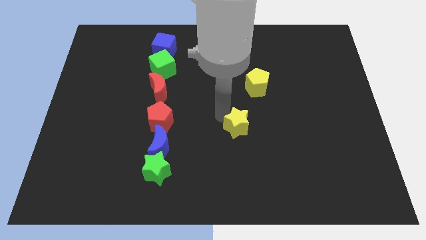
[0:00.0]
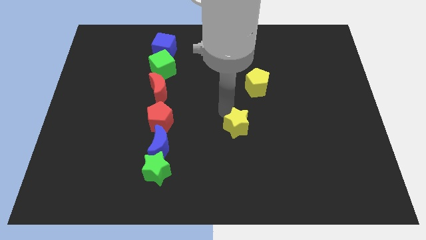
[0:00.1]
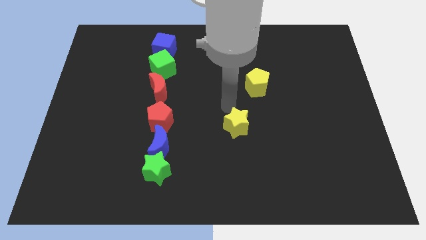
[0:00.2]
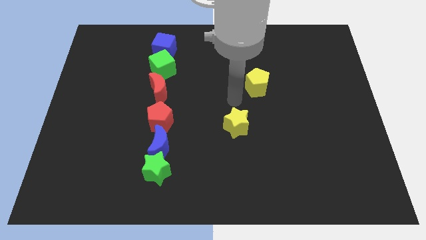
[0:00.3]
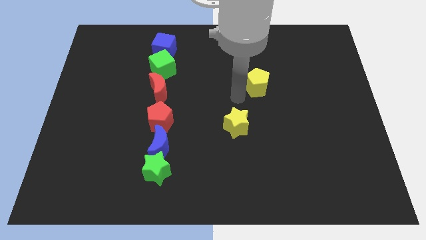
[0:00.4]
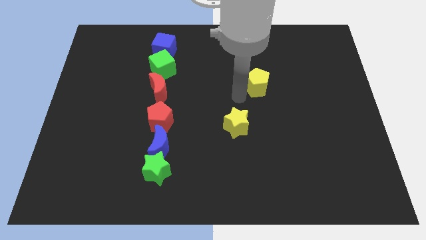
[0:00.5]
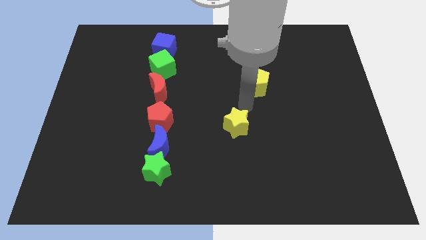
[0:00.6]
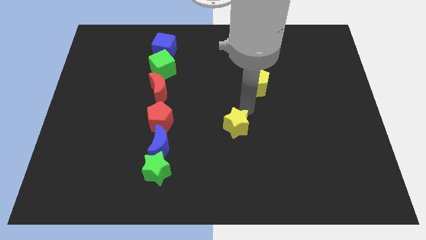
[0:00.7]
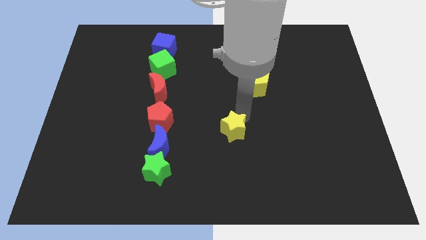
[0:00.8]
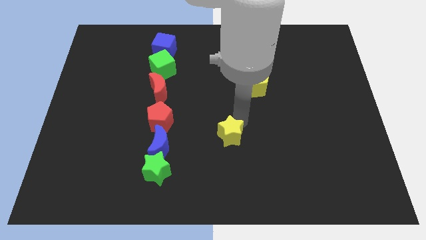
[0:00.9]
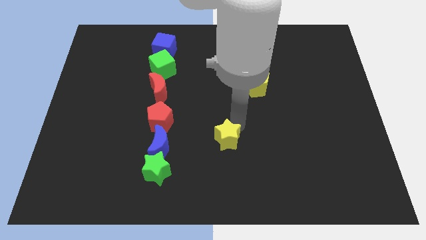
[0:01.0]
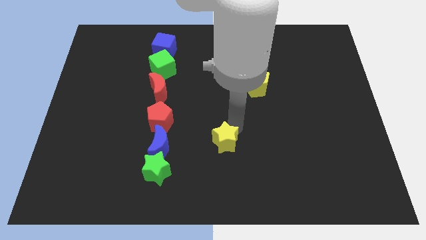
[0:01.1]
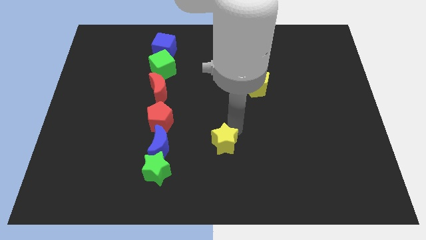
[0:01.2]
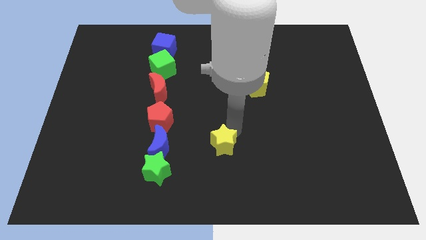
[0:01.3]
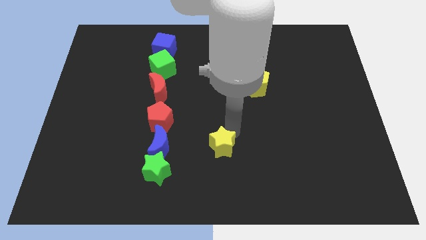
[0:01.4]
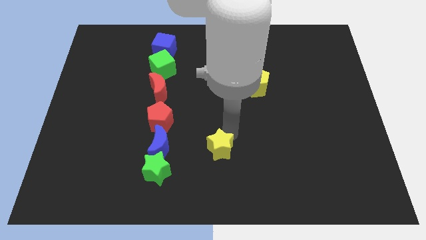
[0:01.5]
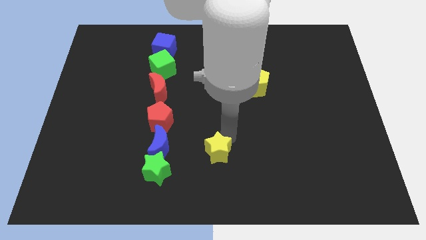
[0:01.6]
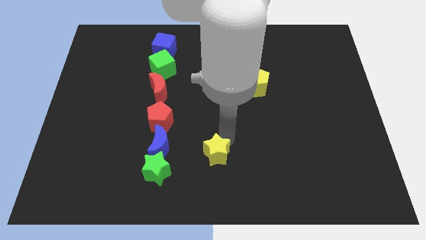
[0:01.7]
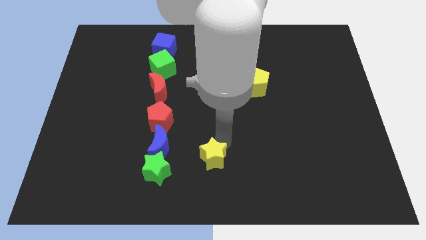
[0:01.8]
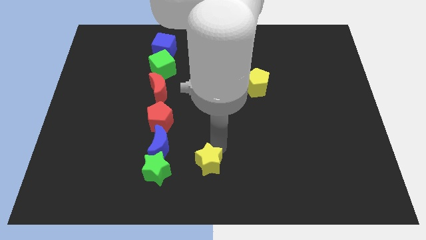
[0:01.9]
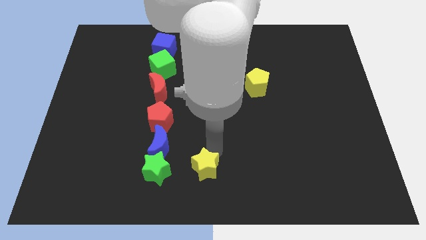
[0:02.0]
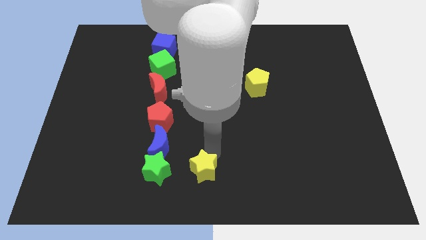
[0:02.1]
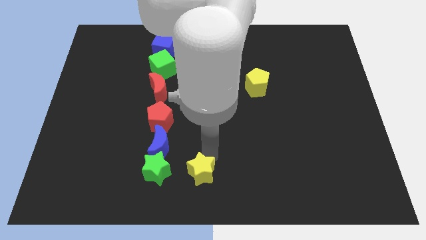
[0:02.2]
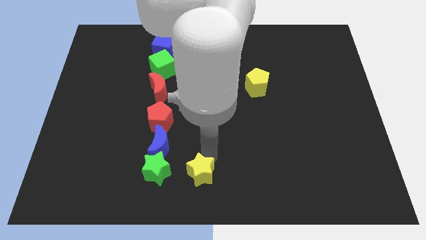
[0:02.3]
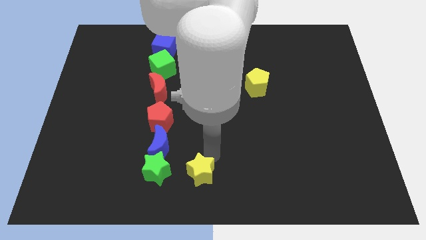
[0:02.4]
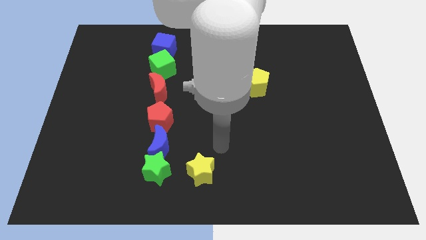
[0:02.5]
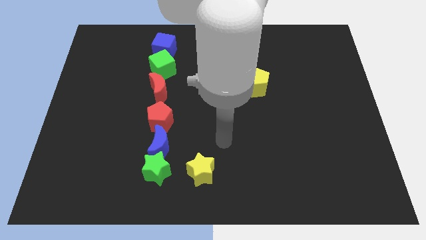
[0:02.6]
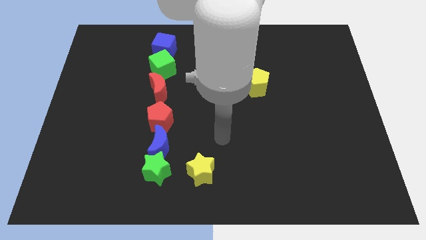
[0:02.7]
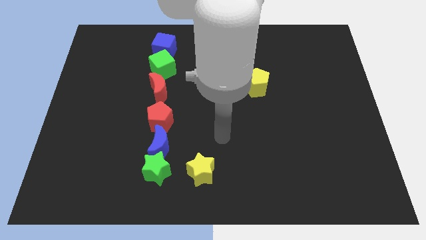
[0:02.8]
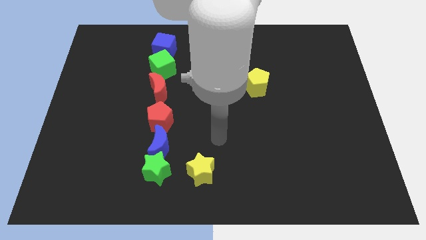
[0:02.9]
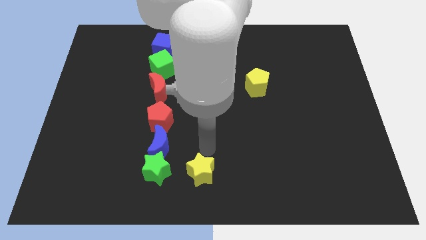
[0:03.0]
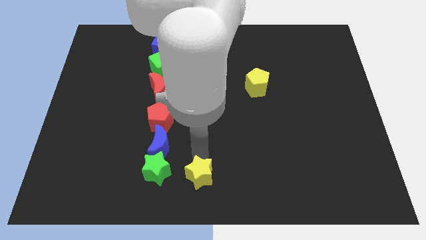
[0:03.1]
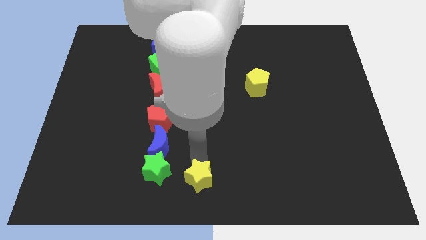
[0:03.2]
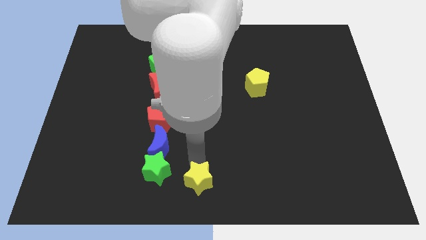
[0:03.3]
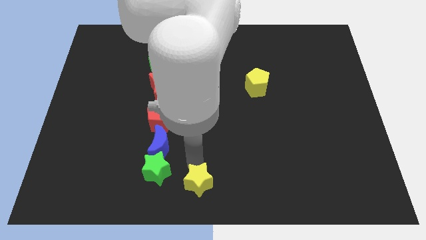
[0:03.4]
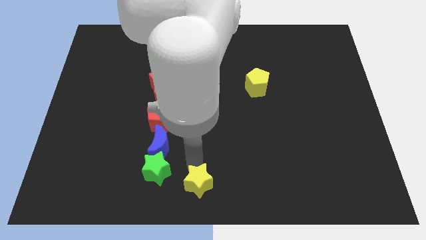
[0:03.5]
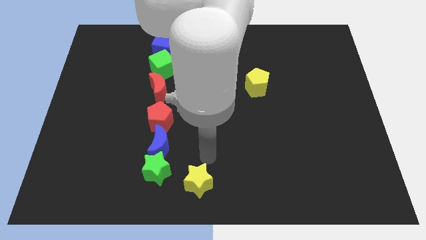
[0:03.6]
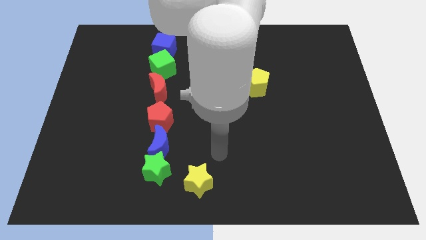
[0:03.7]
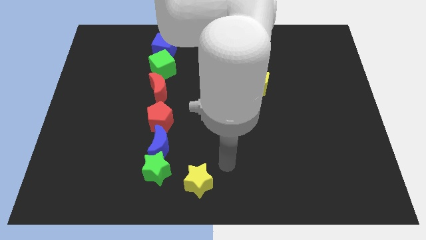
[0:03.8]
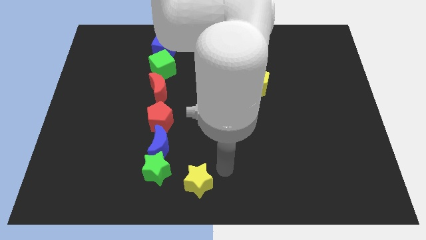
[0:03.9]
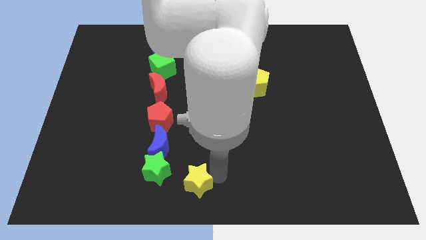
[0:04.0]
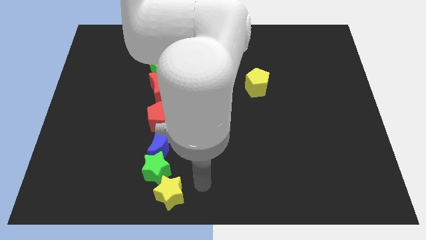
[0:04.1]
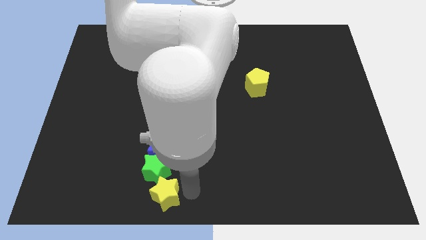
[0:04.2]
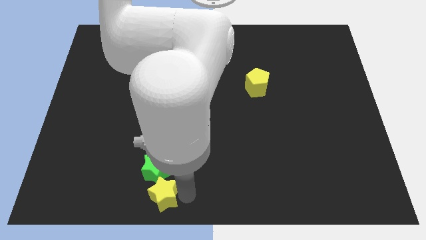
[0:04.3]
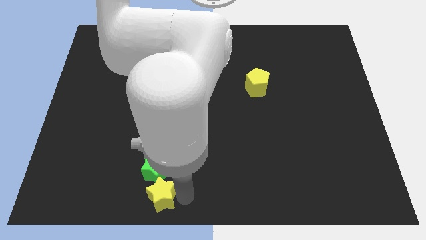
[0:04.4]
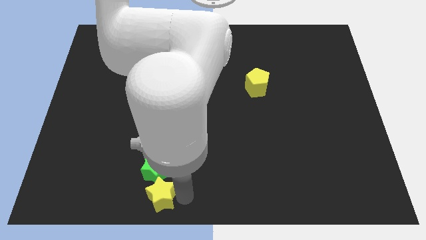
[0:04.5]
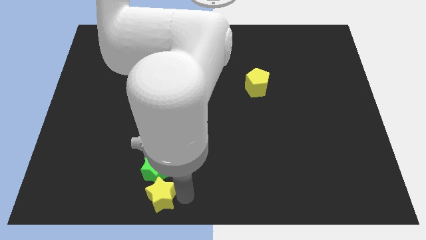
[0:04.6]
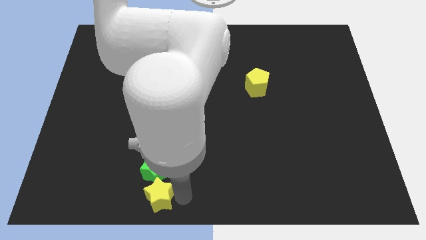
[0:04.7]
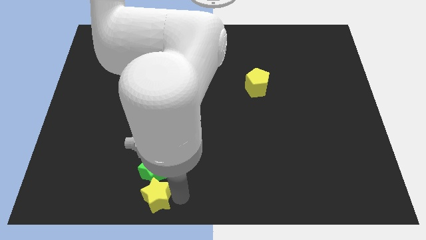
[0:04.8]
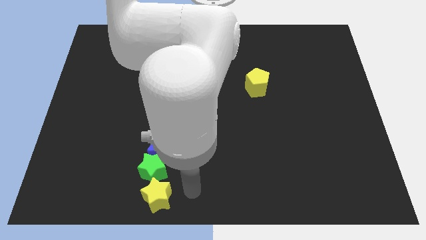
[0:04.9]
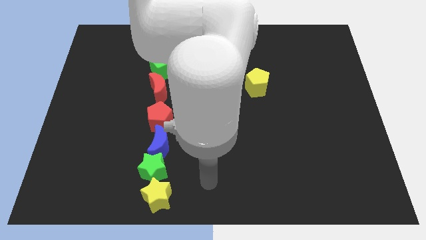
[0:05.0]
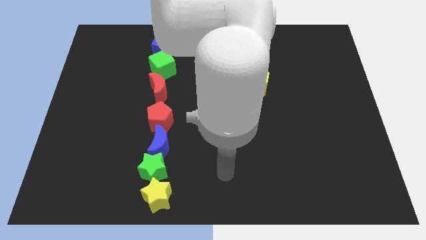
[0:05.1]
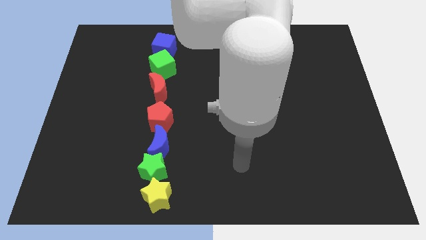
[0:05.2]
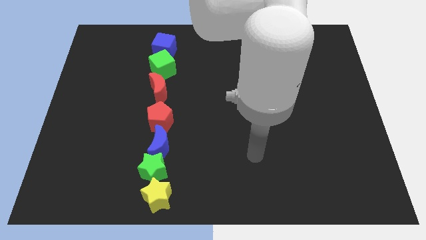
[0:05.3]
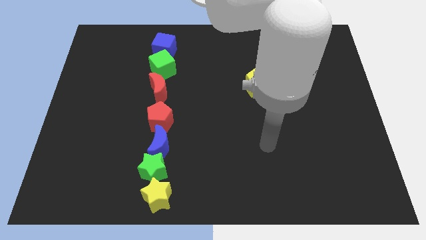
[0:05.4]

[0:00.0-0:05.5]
put the yellow star below the green star

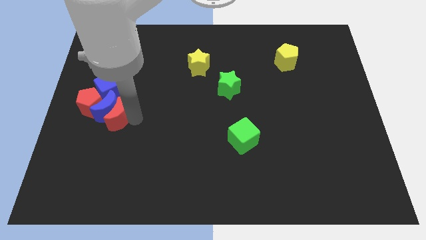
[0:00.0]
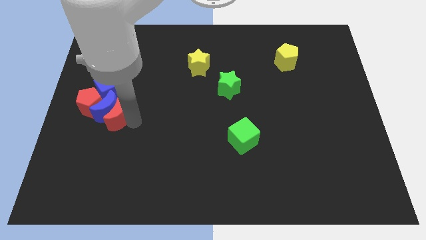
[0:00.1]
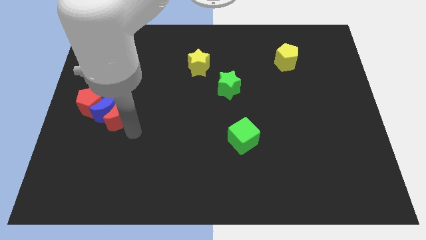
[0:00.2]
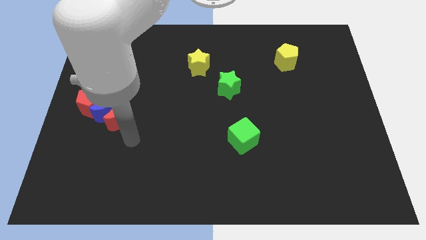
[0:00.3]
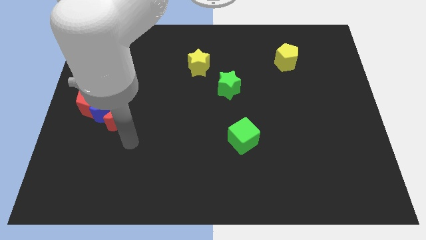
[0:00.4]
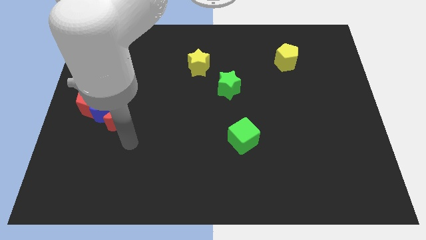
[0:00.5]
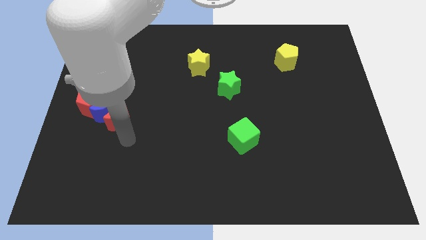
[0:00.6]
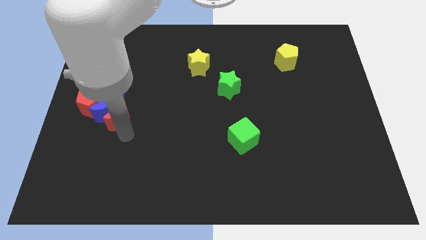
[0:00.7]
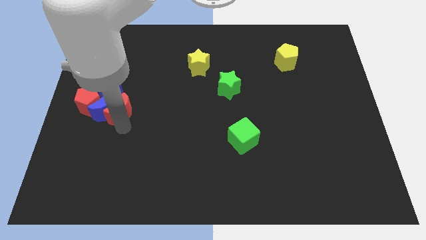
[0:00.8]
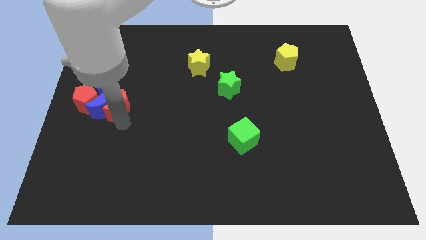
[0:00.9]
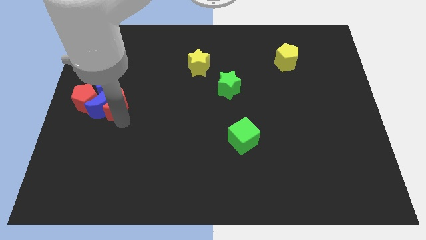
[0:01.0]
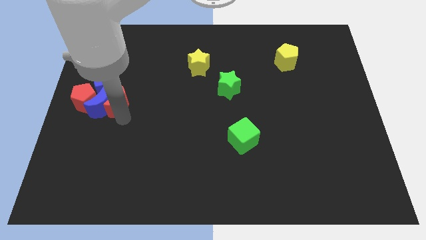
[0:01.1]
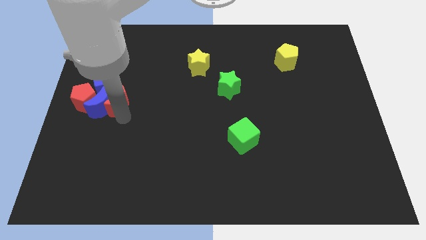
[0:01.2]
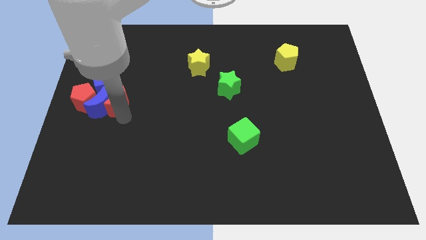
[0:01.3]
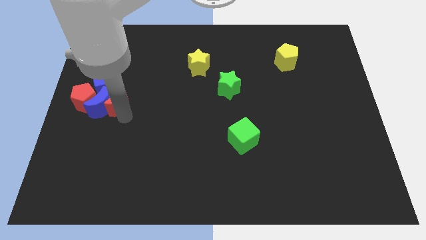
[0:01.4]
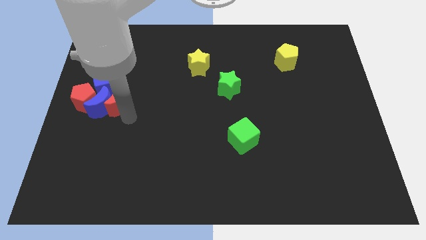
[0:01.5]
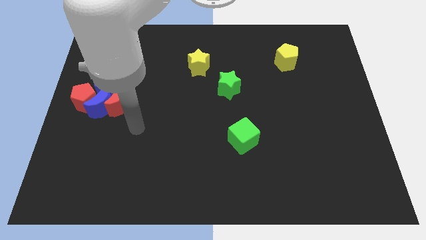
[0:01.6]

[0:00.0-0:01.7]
move the group of red and blue blocks towards the left center of the board

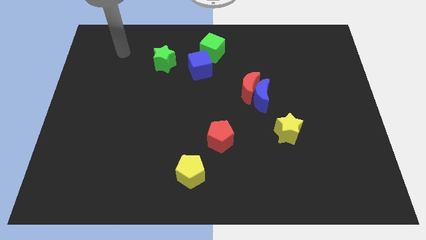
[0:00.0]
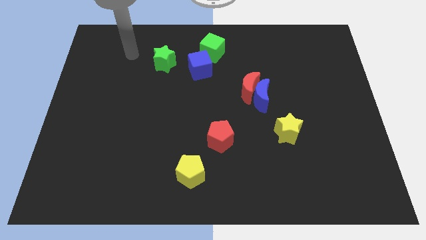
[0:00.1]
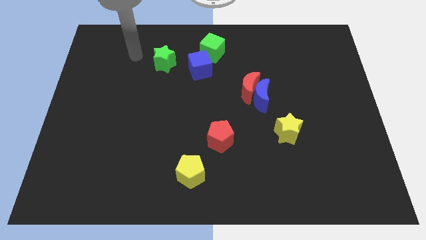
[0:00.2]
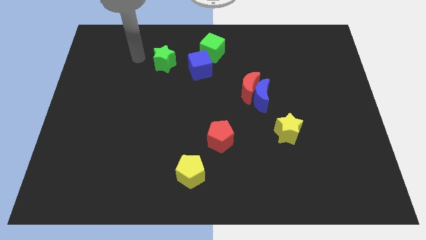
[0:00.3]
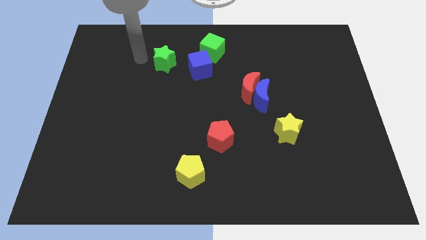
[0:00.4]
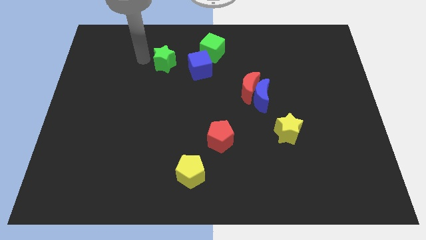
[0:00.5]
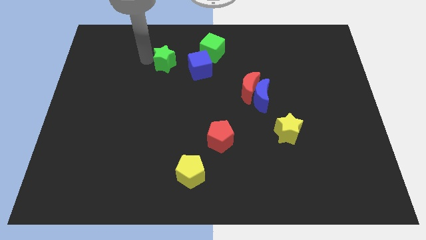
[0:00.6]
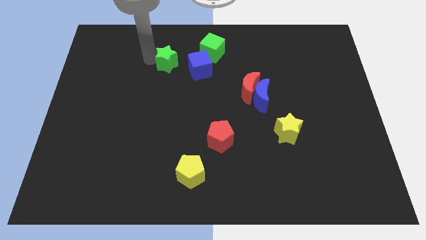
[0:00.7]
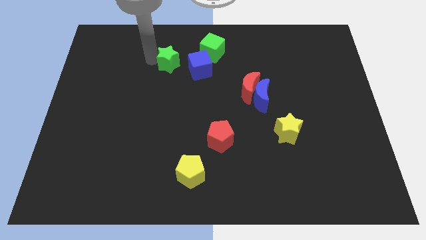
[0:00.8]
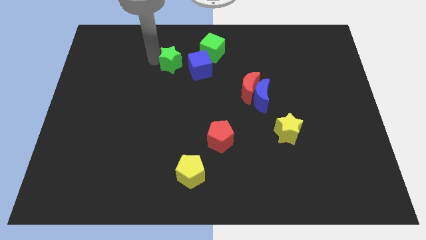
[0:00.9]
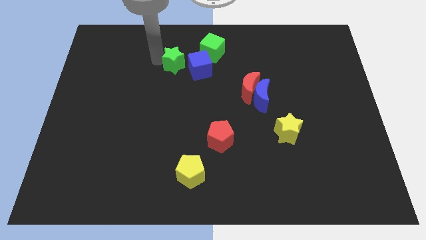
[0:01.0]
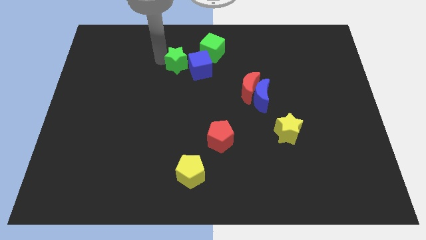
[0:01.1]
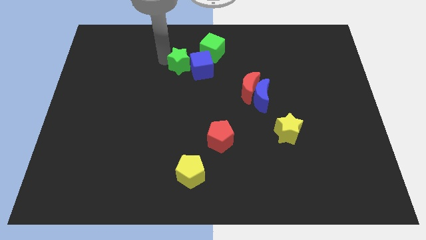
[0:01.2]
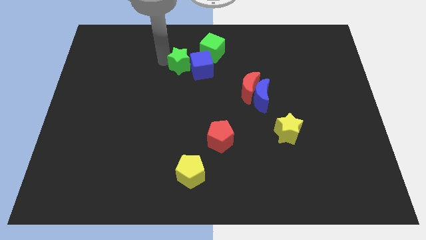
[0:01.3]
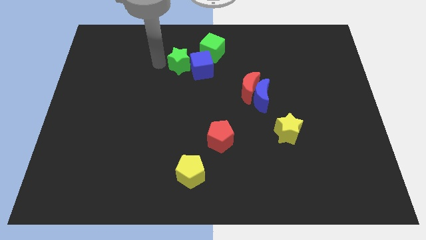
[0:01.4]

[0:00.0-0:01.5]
push green star to the left of blue cube

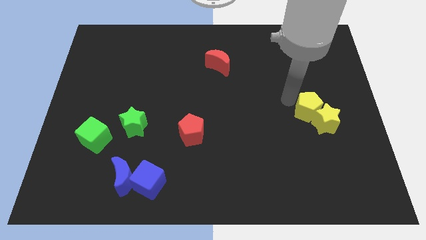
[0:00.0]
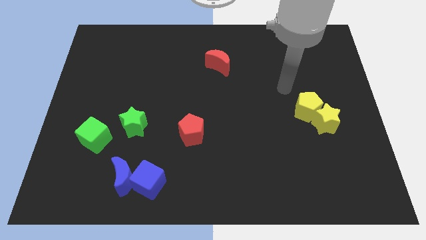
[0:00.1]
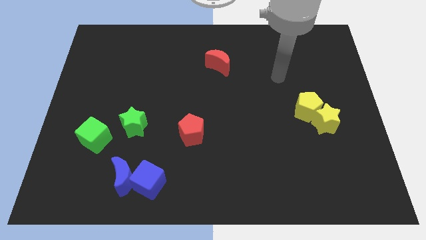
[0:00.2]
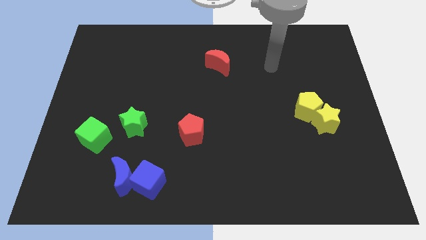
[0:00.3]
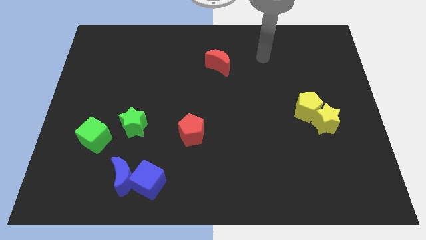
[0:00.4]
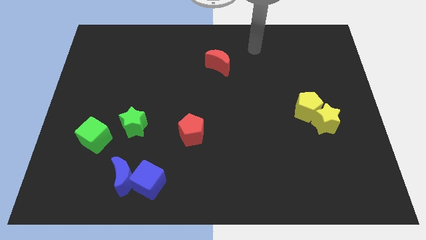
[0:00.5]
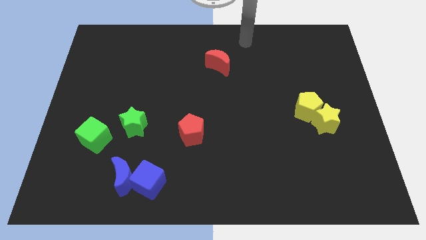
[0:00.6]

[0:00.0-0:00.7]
slide your arm away from the yellow pentagon
